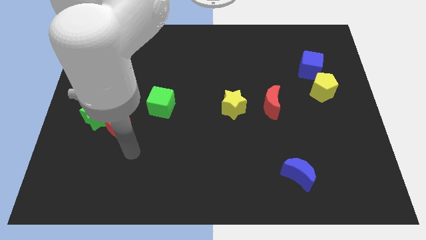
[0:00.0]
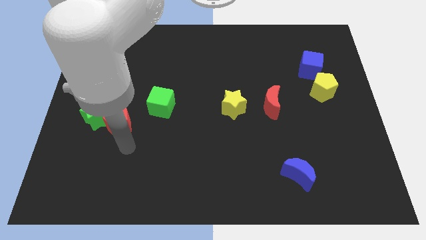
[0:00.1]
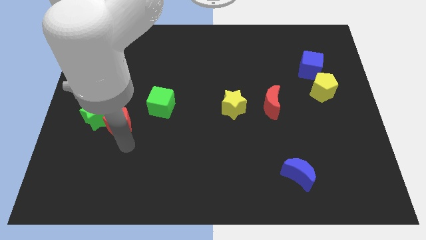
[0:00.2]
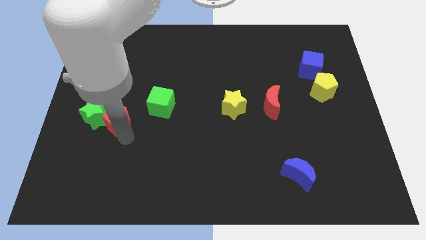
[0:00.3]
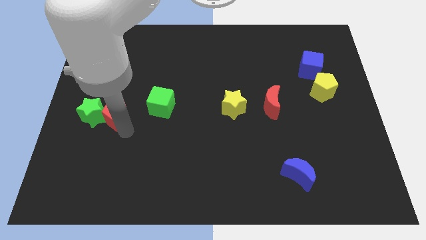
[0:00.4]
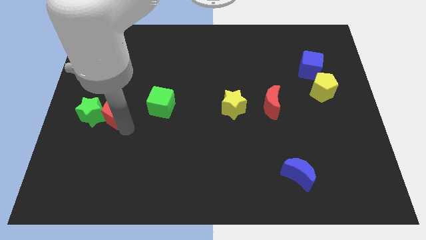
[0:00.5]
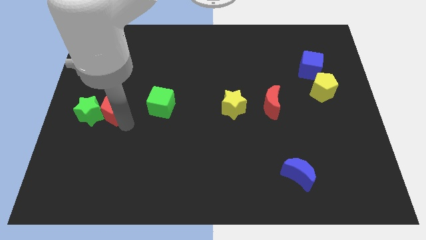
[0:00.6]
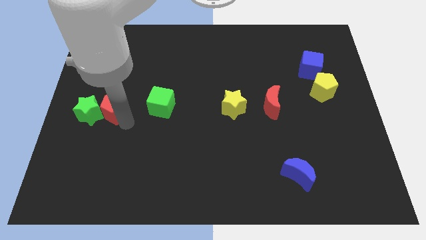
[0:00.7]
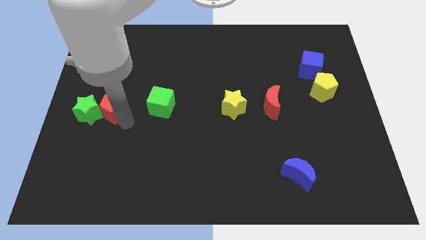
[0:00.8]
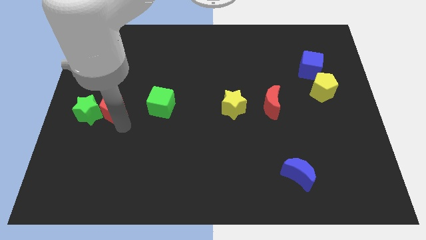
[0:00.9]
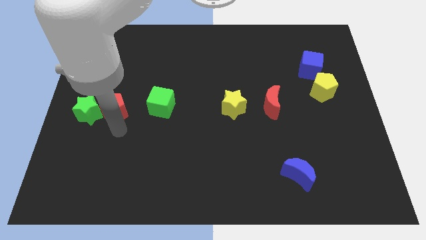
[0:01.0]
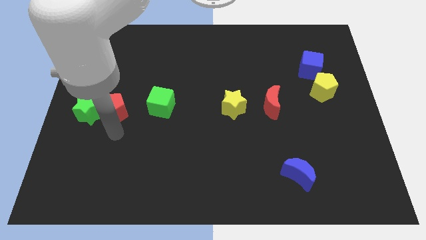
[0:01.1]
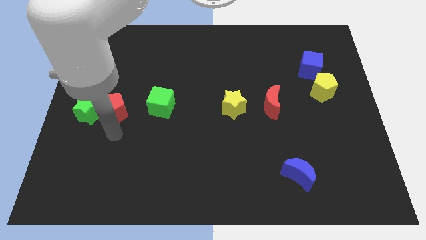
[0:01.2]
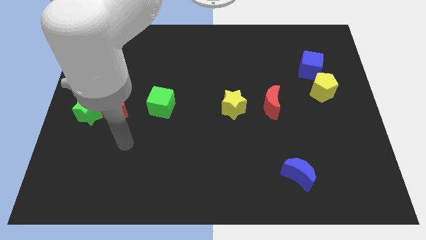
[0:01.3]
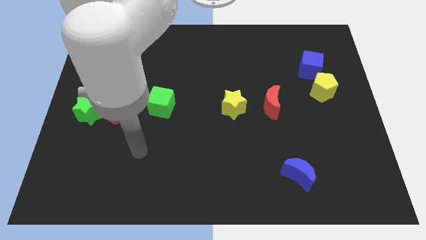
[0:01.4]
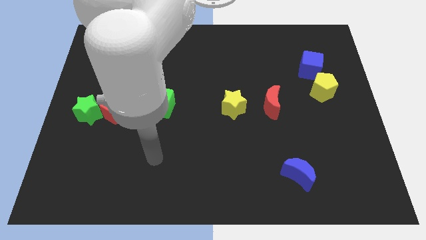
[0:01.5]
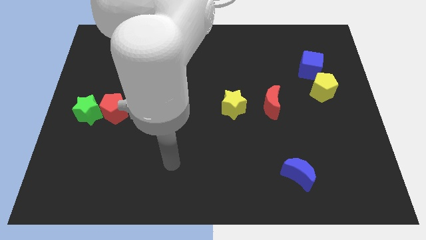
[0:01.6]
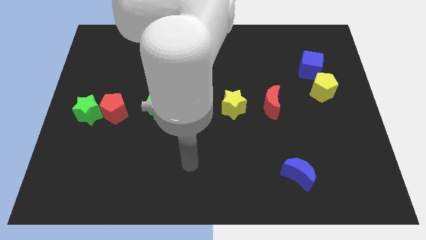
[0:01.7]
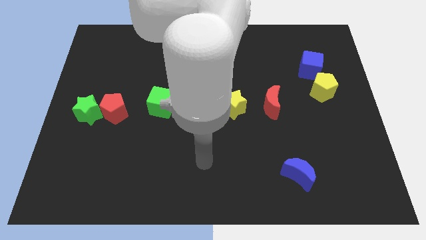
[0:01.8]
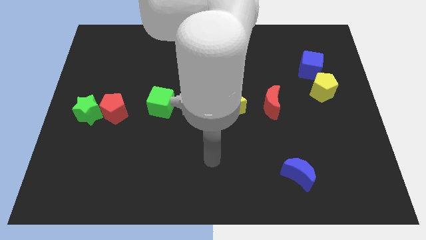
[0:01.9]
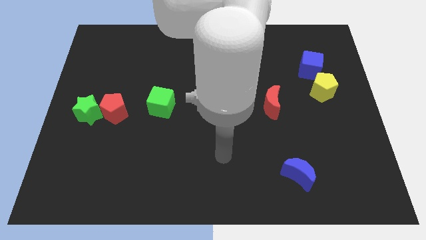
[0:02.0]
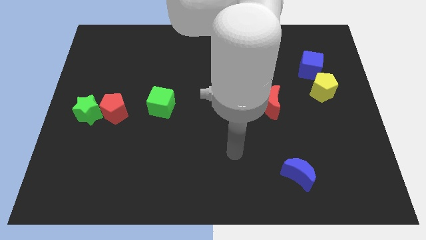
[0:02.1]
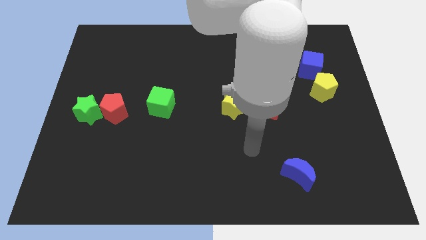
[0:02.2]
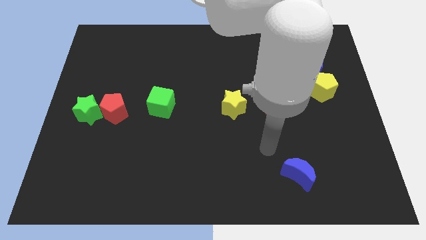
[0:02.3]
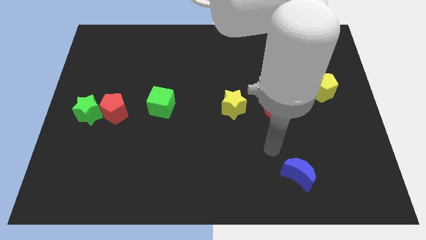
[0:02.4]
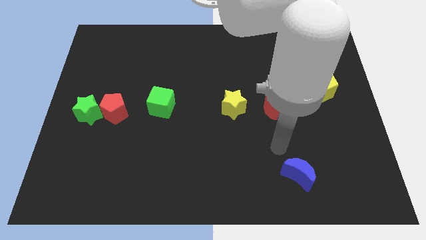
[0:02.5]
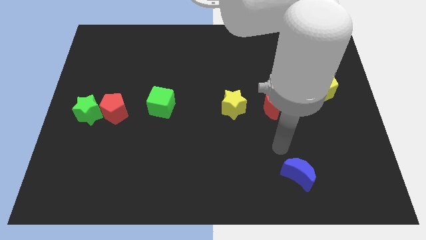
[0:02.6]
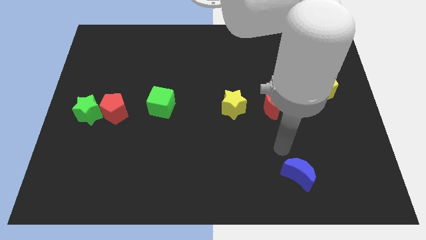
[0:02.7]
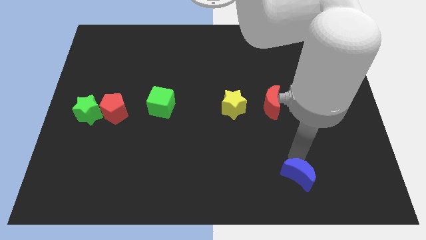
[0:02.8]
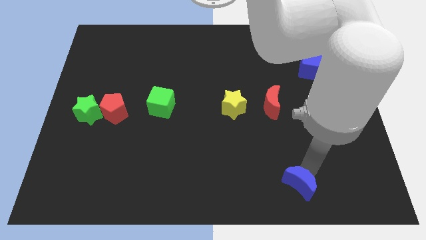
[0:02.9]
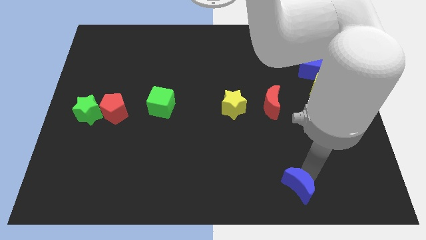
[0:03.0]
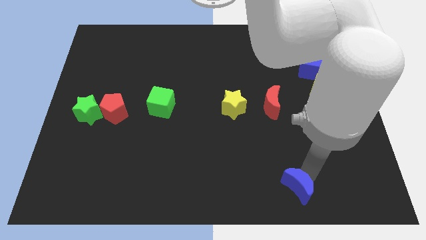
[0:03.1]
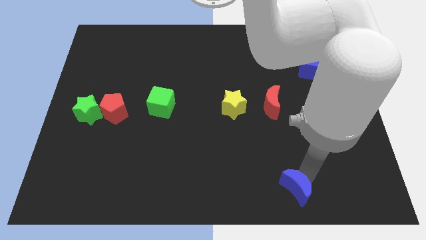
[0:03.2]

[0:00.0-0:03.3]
move red pentagon to the right of green star slightly touch blue moon

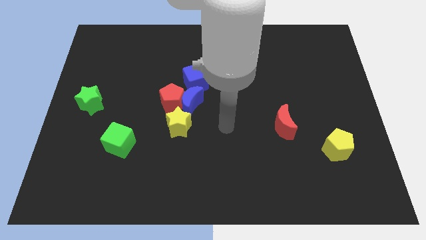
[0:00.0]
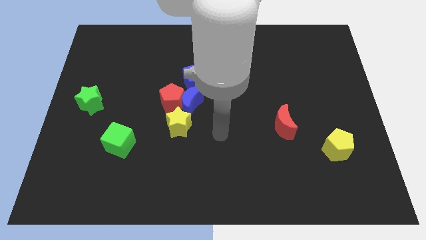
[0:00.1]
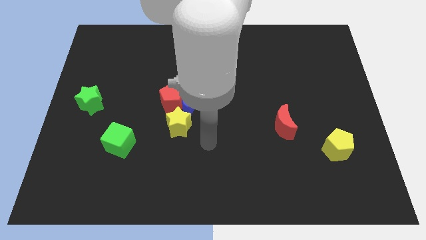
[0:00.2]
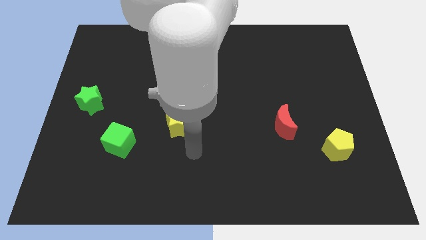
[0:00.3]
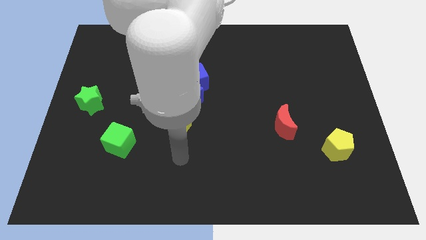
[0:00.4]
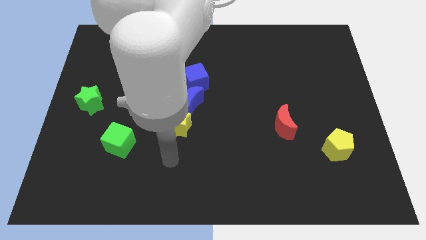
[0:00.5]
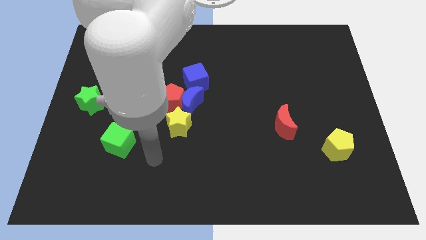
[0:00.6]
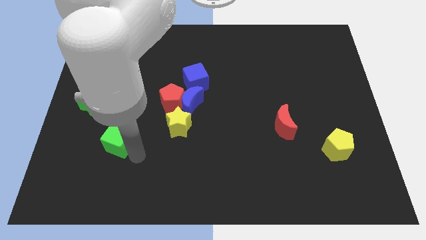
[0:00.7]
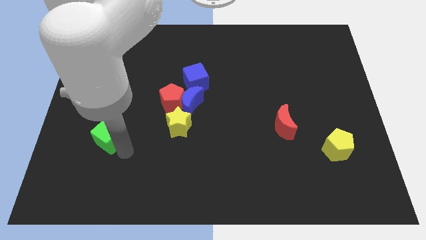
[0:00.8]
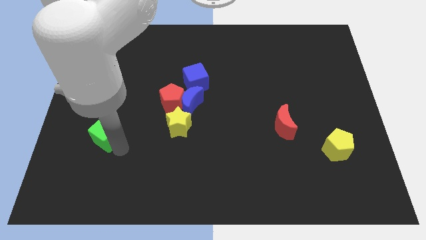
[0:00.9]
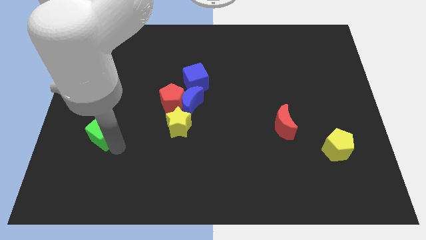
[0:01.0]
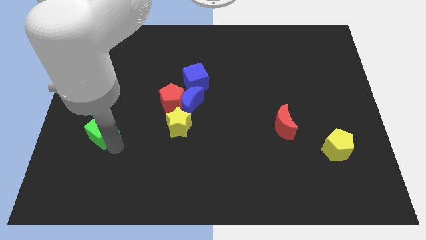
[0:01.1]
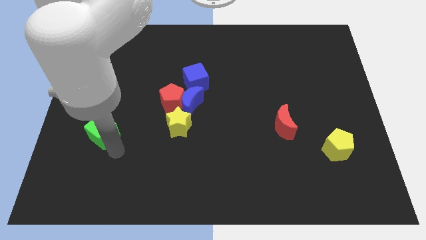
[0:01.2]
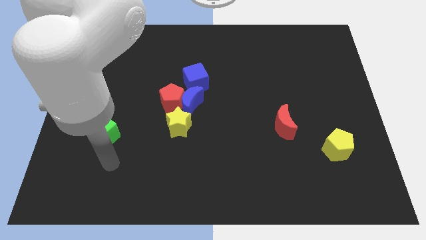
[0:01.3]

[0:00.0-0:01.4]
push the green cube slightly to the left

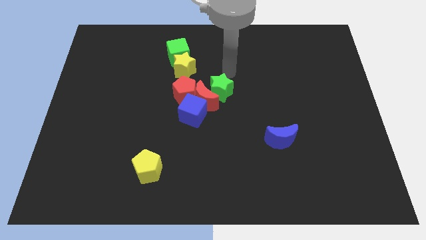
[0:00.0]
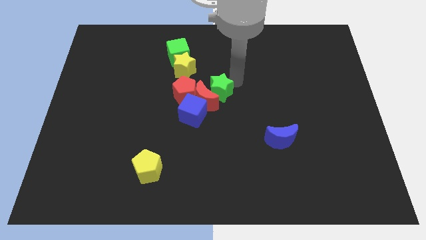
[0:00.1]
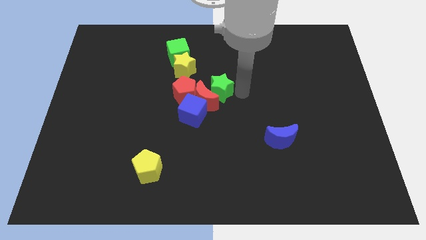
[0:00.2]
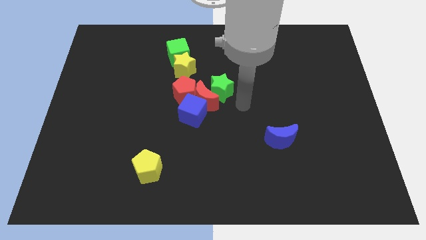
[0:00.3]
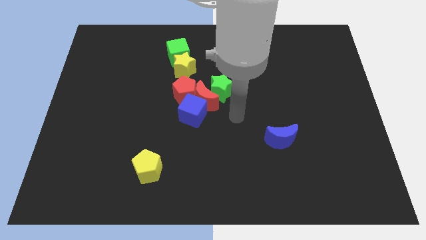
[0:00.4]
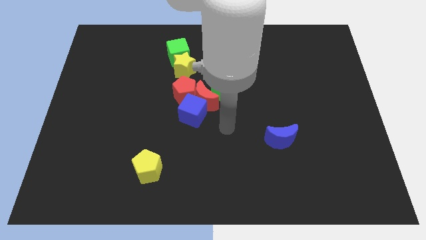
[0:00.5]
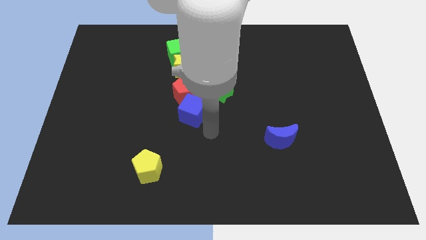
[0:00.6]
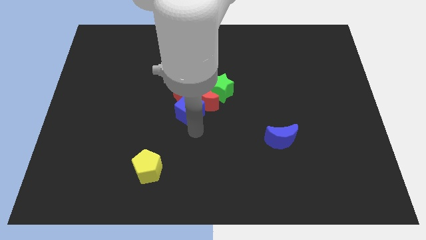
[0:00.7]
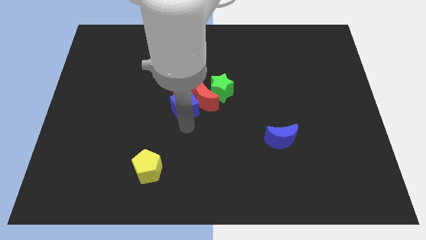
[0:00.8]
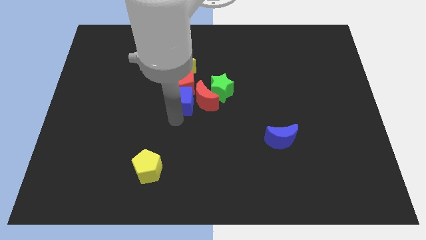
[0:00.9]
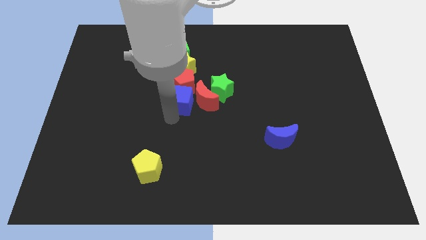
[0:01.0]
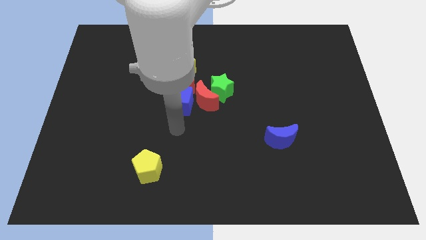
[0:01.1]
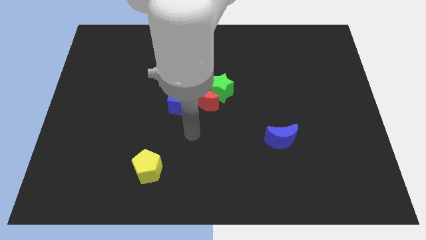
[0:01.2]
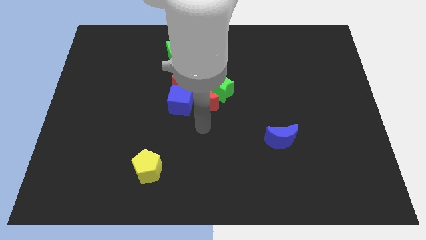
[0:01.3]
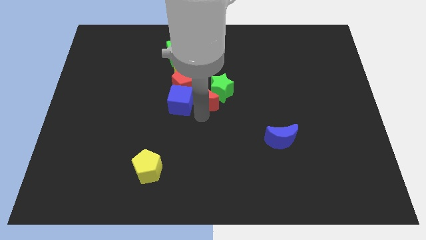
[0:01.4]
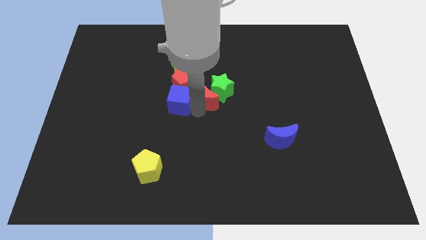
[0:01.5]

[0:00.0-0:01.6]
push the blue cube and red pentagon slightly up

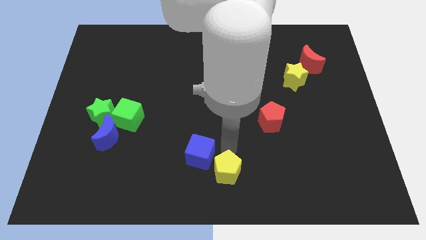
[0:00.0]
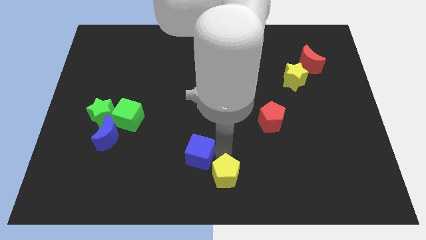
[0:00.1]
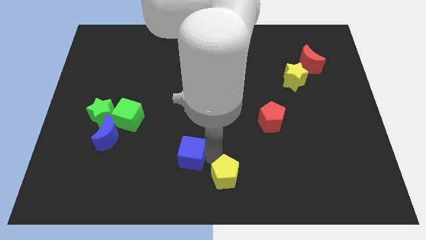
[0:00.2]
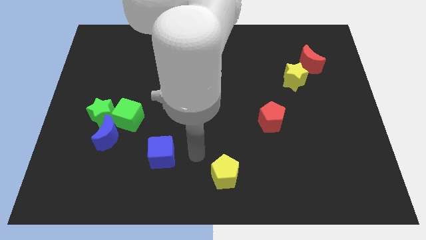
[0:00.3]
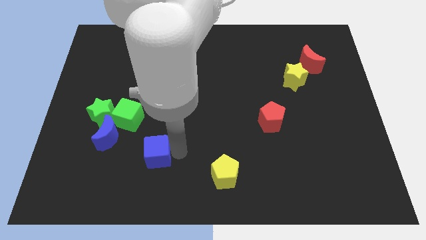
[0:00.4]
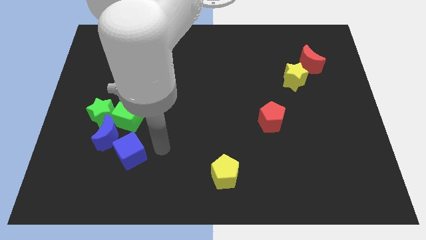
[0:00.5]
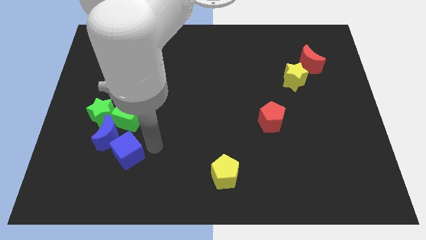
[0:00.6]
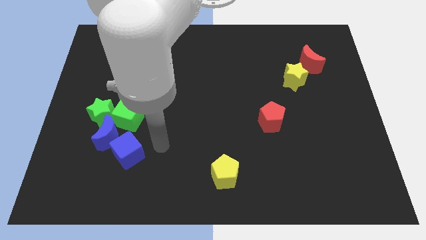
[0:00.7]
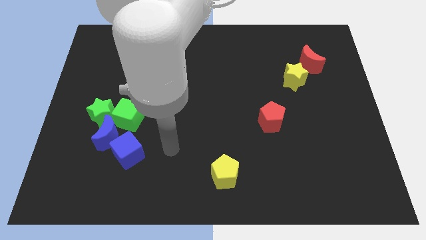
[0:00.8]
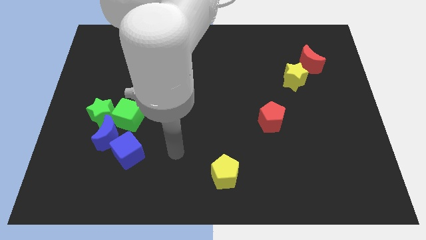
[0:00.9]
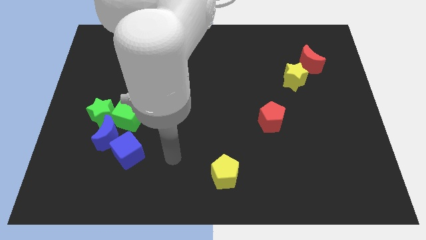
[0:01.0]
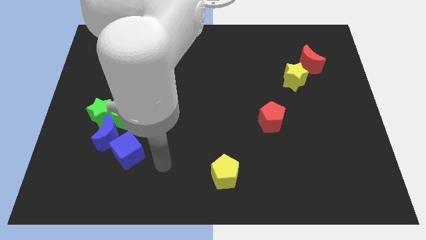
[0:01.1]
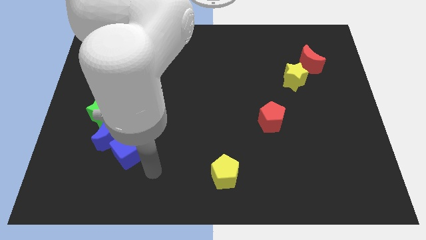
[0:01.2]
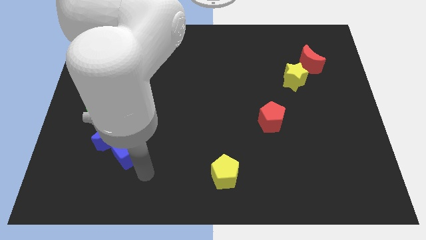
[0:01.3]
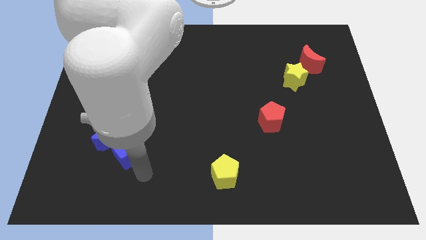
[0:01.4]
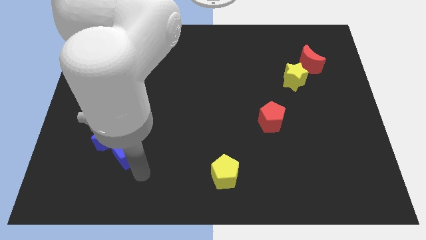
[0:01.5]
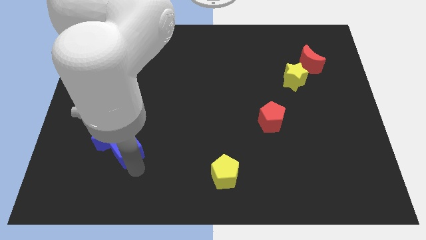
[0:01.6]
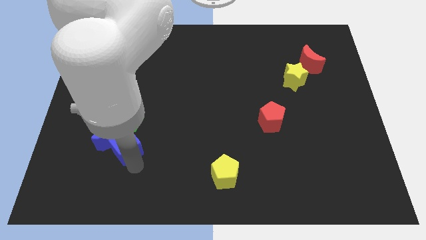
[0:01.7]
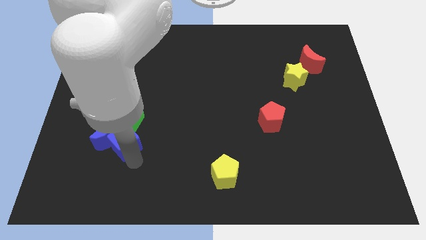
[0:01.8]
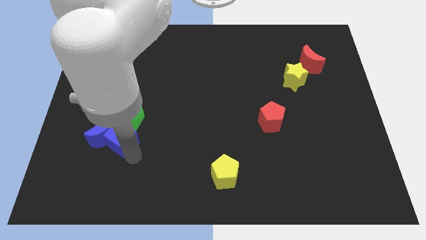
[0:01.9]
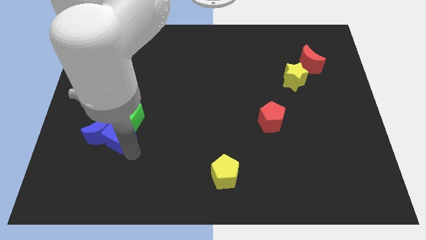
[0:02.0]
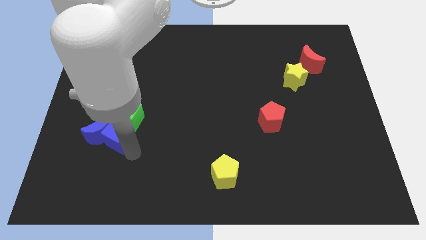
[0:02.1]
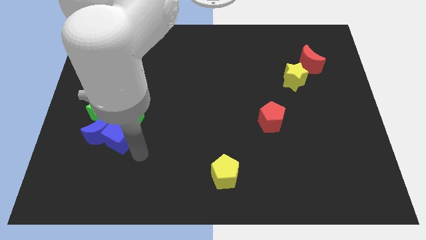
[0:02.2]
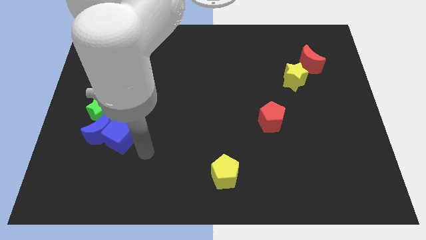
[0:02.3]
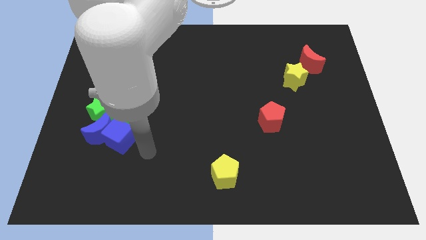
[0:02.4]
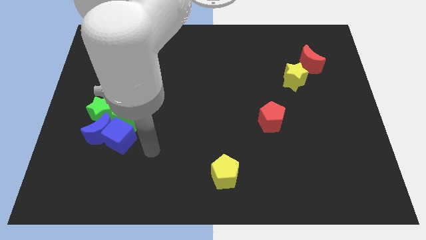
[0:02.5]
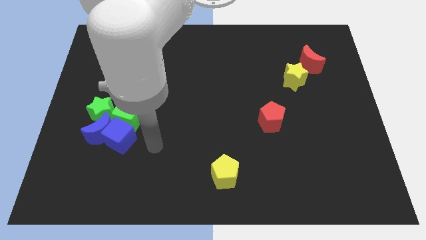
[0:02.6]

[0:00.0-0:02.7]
push the blue cube into the blue crescent
